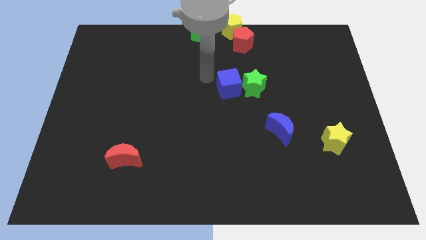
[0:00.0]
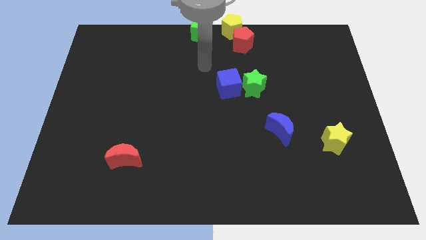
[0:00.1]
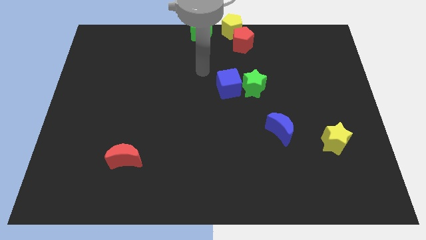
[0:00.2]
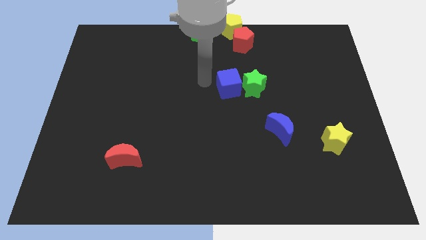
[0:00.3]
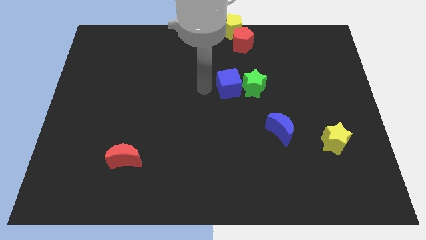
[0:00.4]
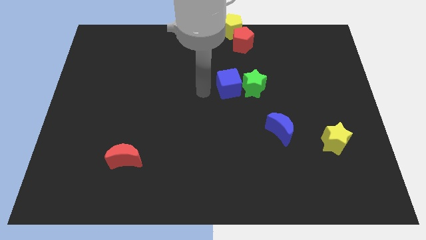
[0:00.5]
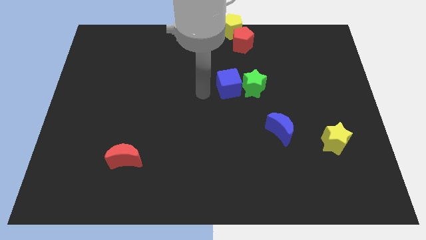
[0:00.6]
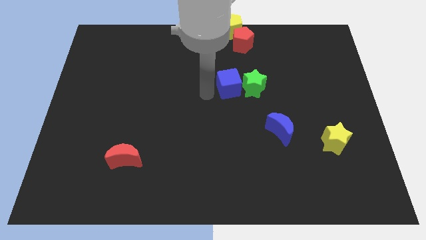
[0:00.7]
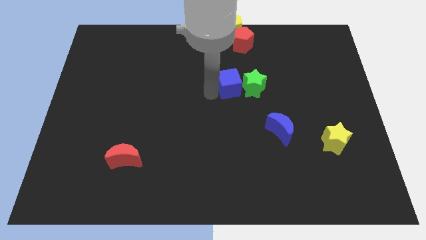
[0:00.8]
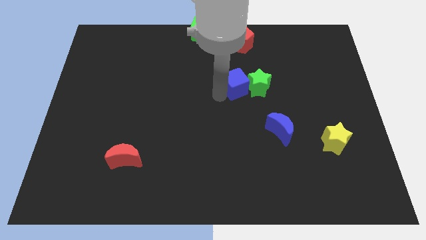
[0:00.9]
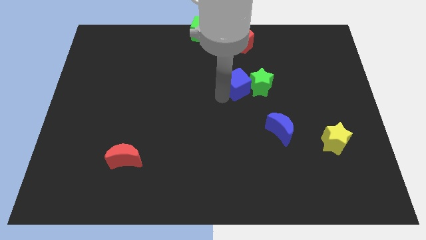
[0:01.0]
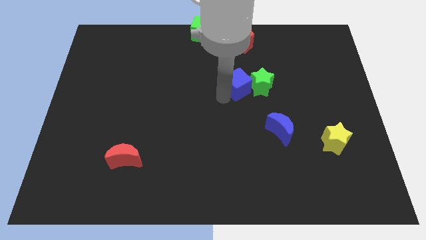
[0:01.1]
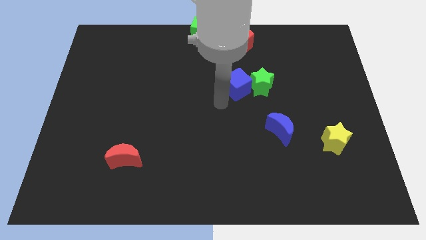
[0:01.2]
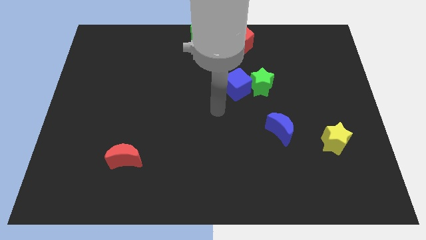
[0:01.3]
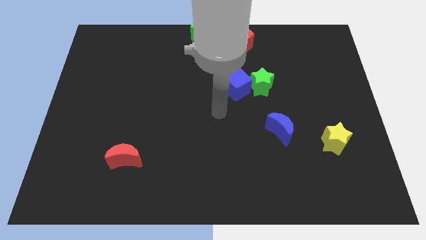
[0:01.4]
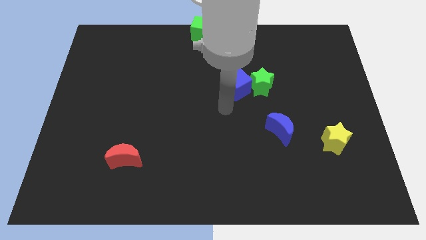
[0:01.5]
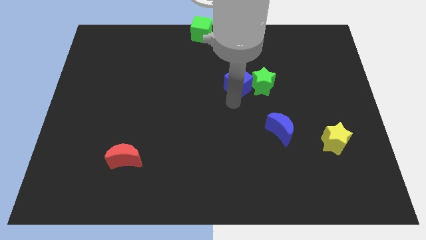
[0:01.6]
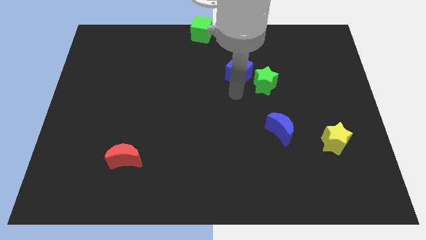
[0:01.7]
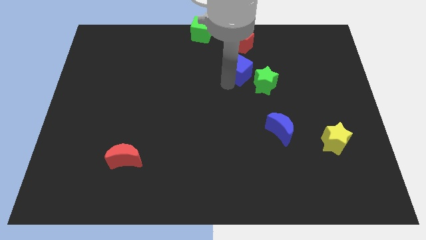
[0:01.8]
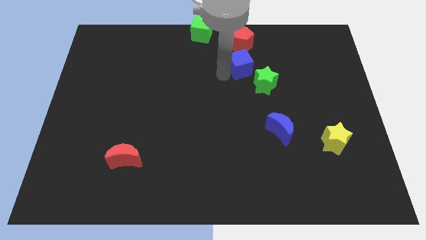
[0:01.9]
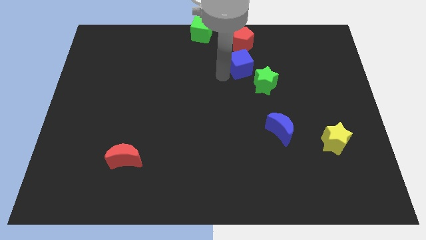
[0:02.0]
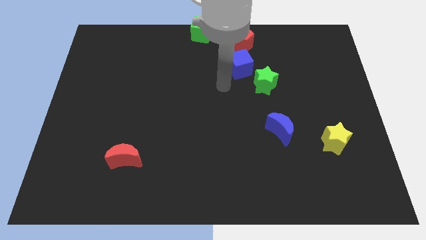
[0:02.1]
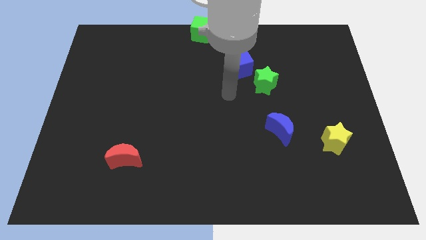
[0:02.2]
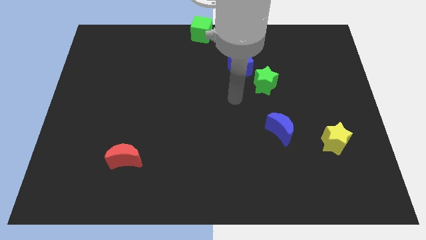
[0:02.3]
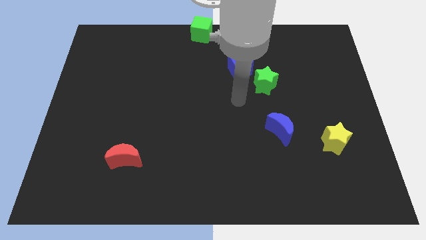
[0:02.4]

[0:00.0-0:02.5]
separate the blue cube towards the bottom red pentagon

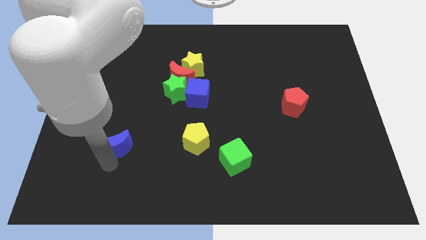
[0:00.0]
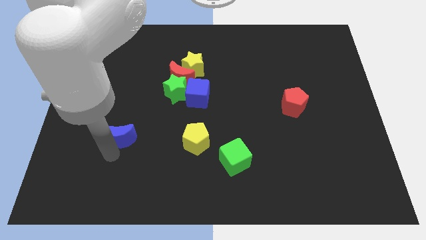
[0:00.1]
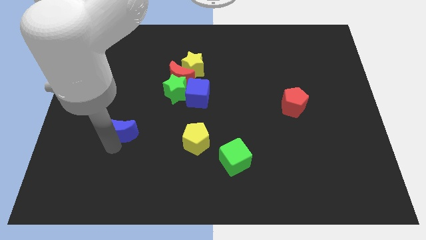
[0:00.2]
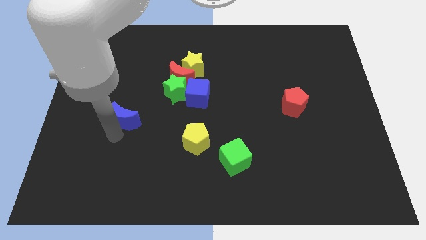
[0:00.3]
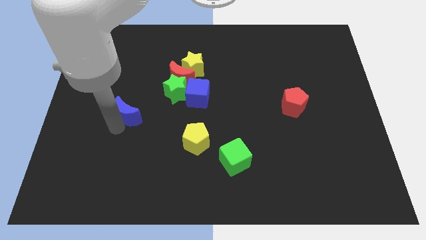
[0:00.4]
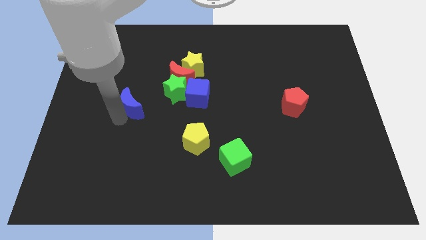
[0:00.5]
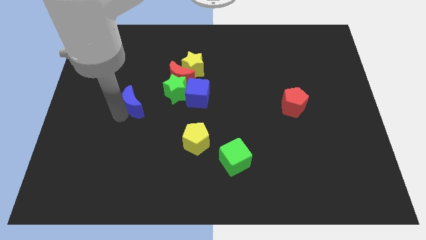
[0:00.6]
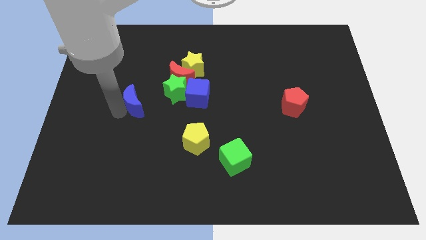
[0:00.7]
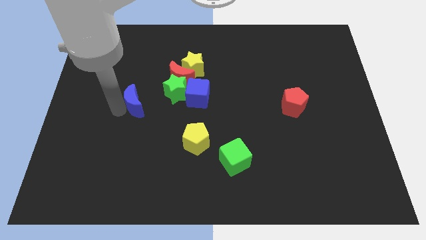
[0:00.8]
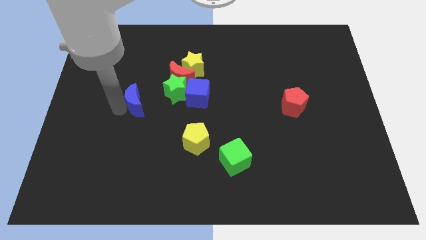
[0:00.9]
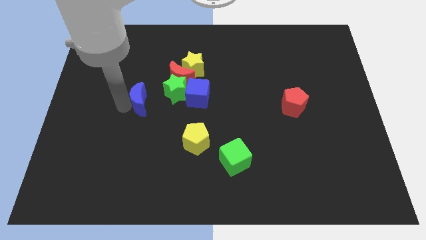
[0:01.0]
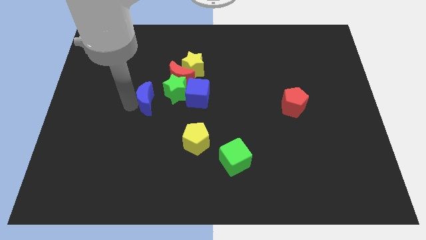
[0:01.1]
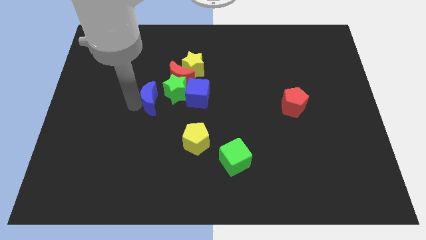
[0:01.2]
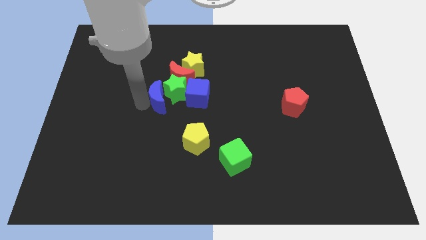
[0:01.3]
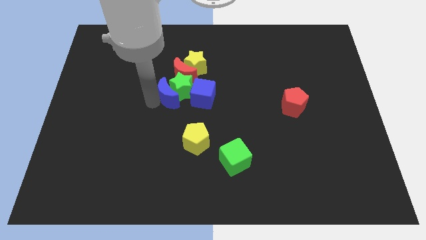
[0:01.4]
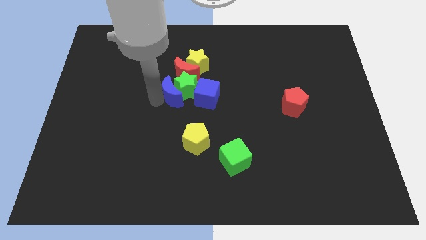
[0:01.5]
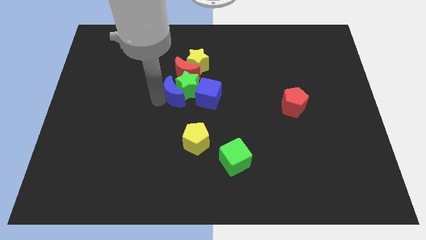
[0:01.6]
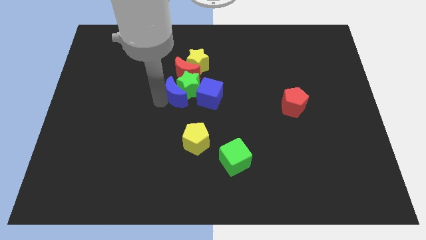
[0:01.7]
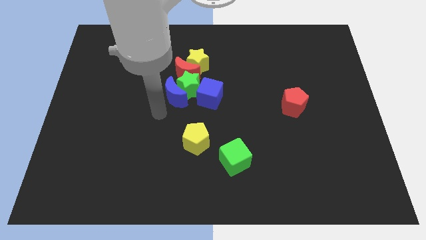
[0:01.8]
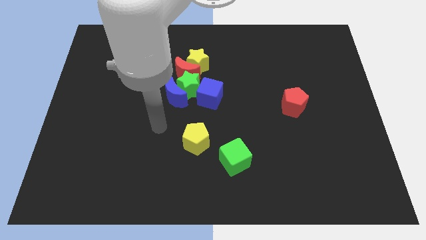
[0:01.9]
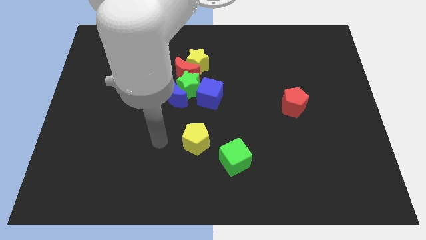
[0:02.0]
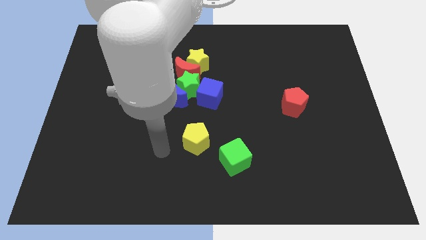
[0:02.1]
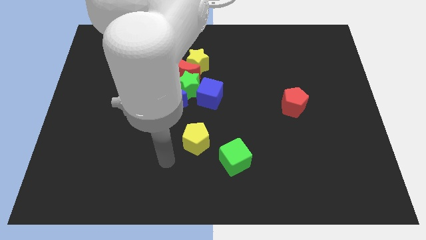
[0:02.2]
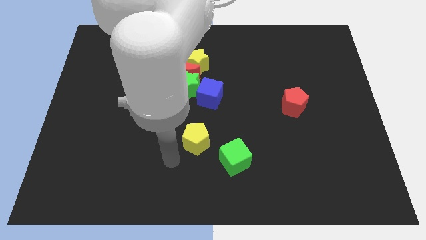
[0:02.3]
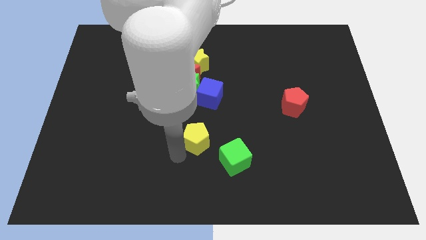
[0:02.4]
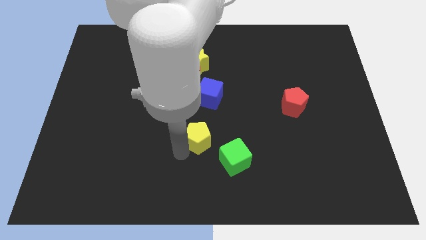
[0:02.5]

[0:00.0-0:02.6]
slightly touch left of the yellow pentagon

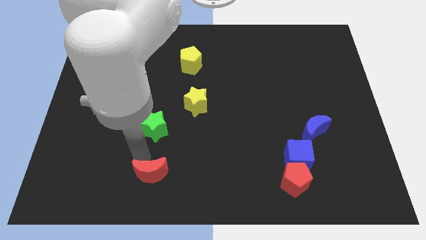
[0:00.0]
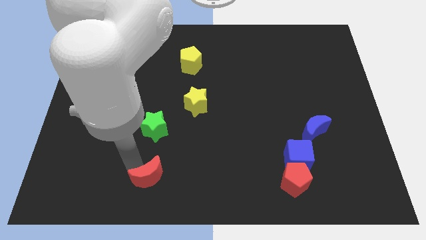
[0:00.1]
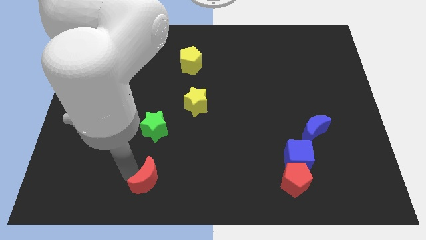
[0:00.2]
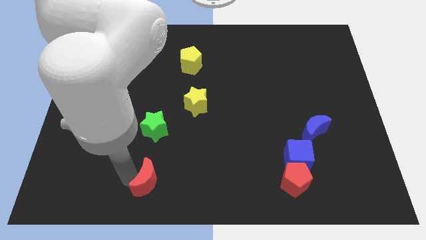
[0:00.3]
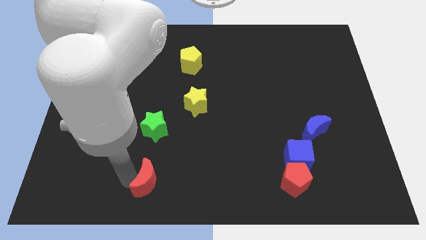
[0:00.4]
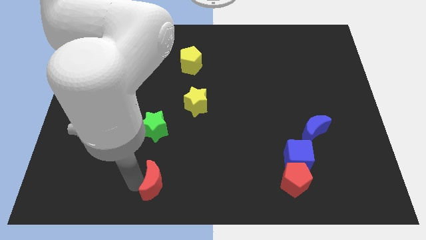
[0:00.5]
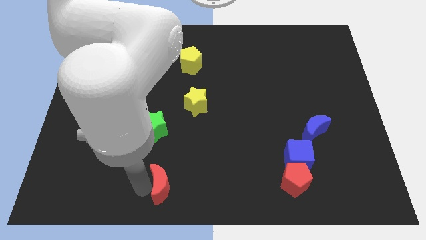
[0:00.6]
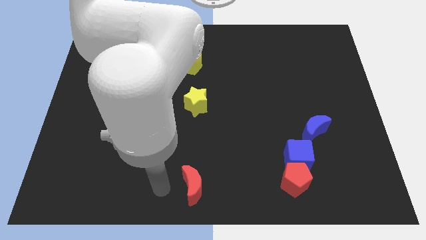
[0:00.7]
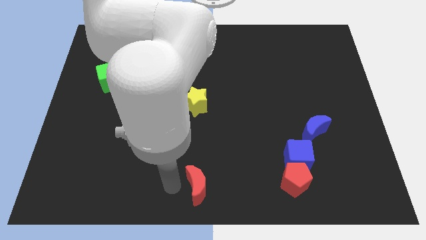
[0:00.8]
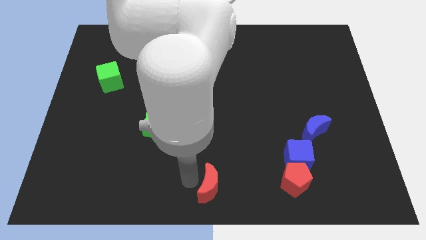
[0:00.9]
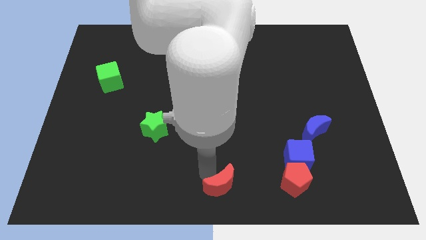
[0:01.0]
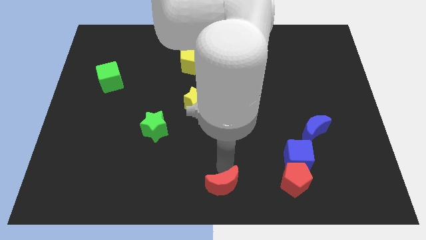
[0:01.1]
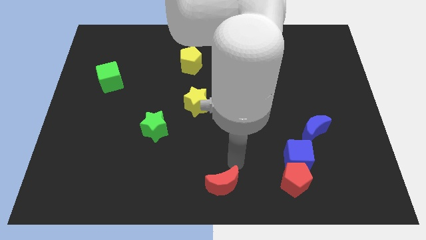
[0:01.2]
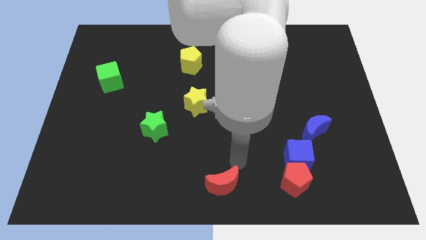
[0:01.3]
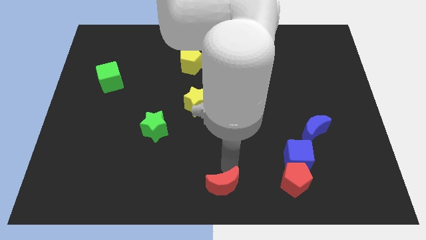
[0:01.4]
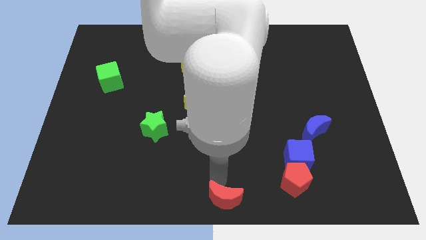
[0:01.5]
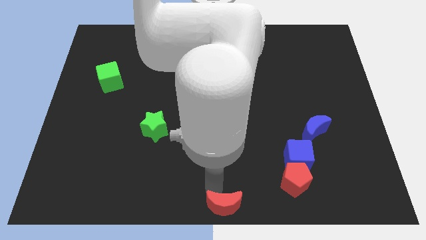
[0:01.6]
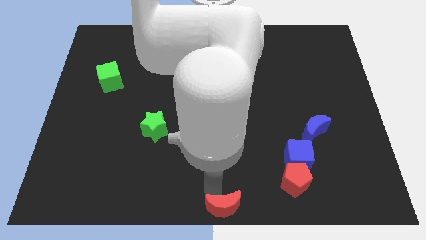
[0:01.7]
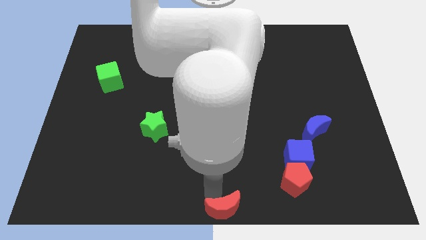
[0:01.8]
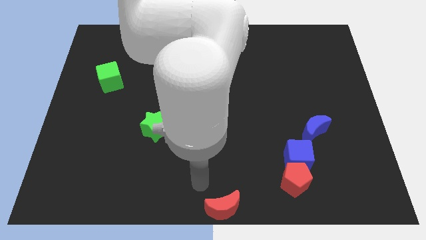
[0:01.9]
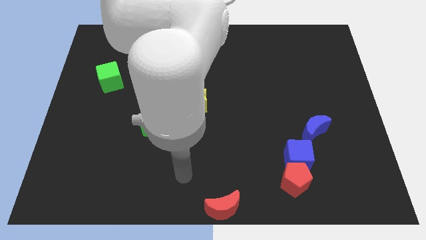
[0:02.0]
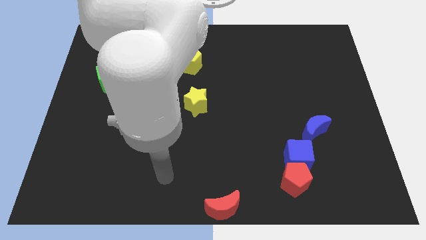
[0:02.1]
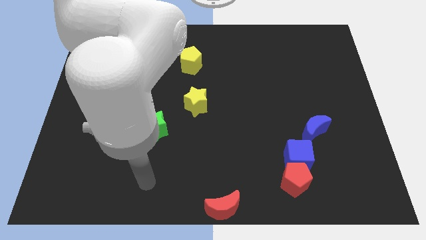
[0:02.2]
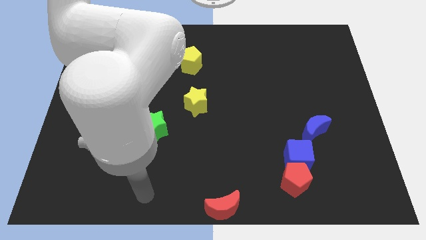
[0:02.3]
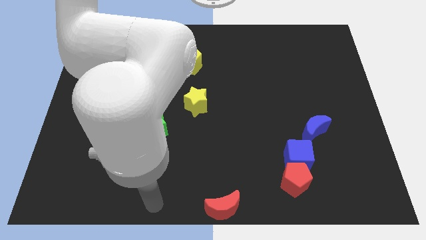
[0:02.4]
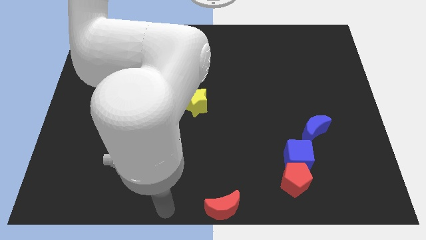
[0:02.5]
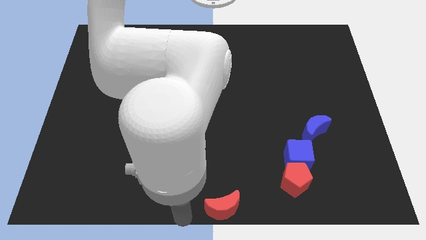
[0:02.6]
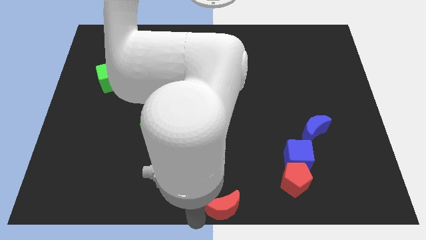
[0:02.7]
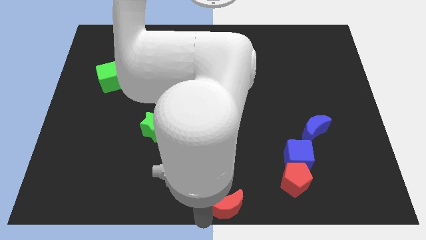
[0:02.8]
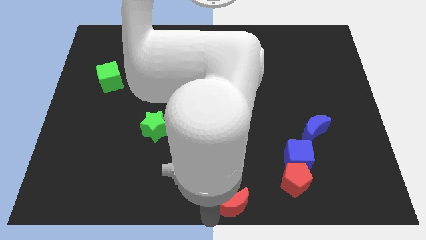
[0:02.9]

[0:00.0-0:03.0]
place the red crescent at the bottom center of the board

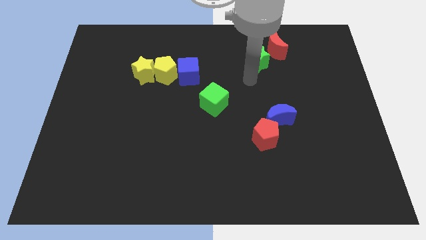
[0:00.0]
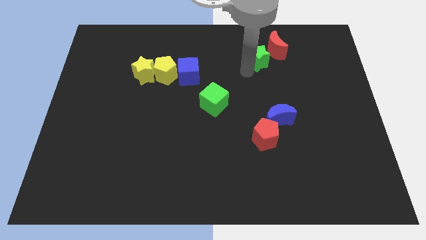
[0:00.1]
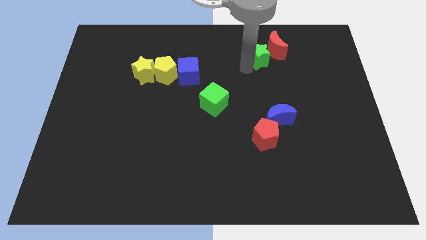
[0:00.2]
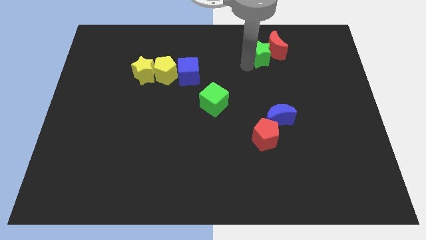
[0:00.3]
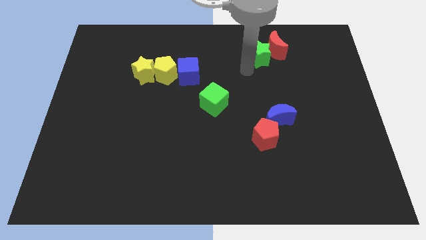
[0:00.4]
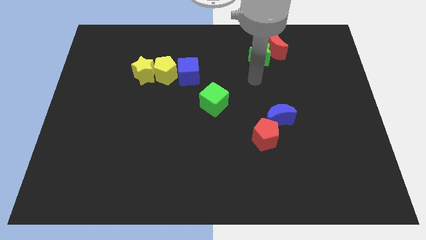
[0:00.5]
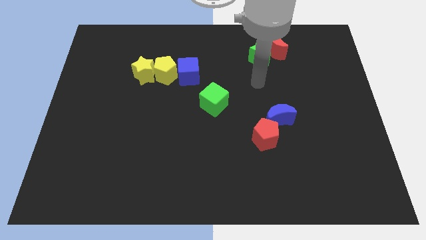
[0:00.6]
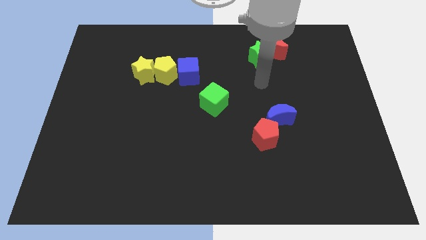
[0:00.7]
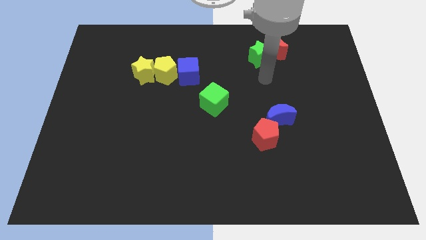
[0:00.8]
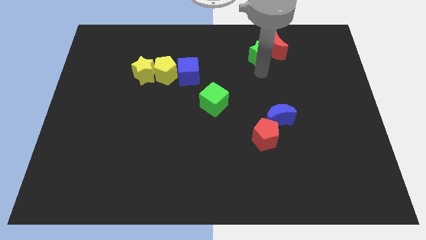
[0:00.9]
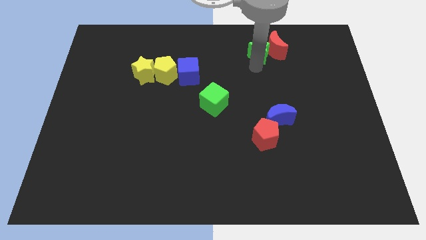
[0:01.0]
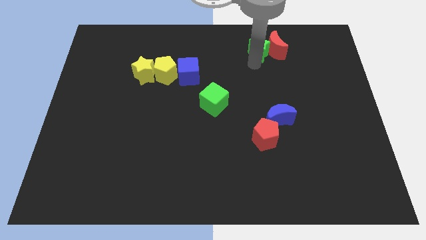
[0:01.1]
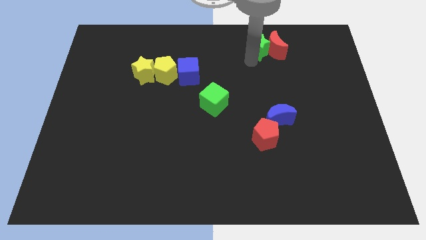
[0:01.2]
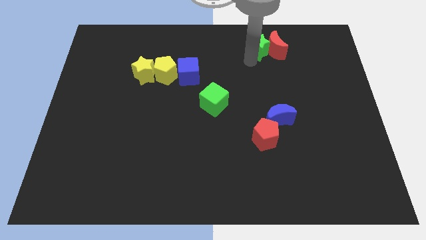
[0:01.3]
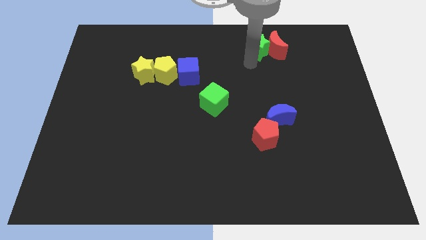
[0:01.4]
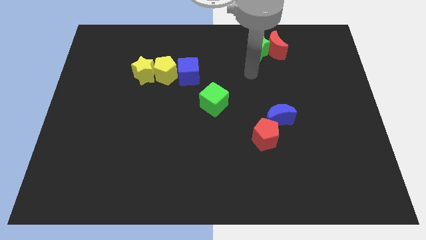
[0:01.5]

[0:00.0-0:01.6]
move the green star to the top side
